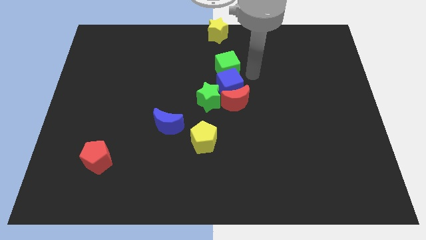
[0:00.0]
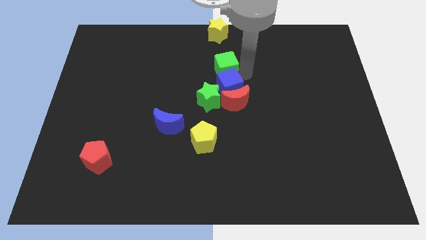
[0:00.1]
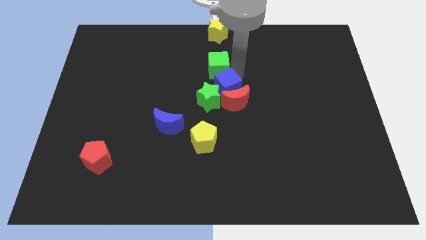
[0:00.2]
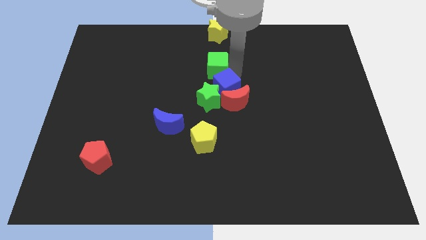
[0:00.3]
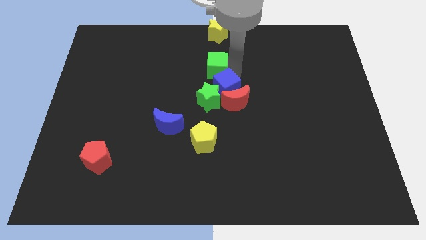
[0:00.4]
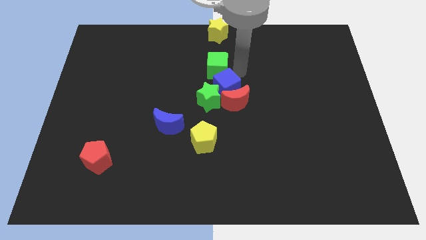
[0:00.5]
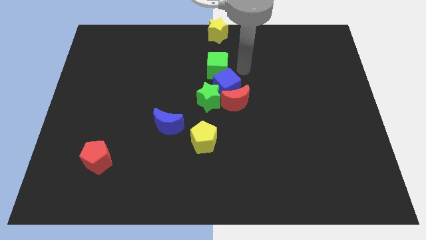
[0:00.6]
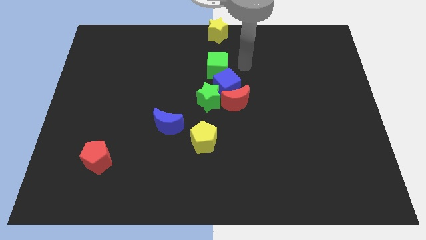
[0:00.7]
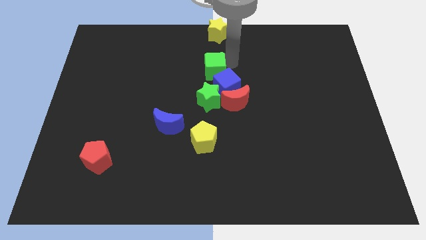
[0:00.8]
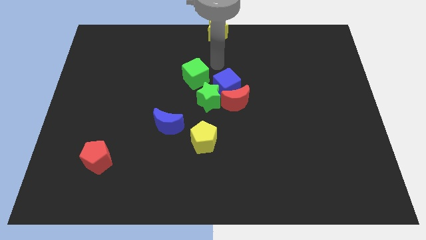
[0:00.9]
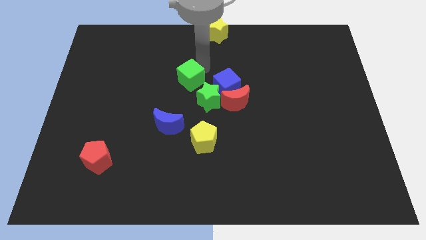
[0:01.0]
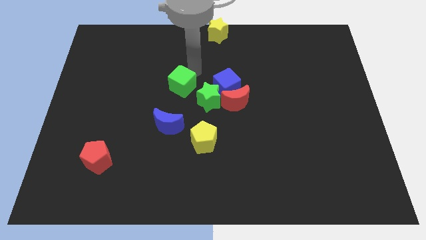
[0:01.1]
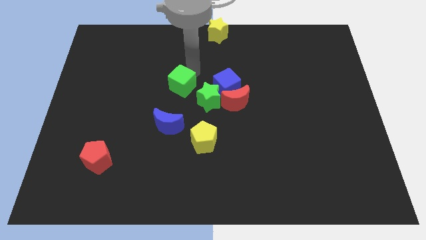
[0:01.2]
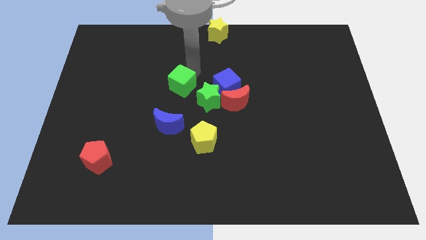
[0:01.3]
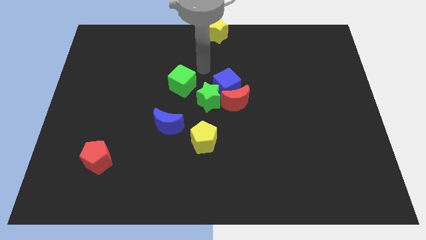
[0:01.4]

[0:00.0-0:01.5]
separate the green cube from the blue cube

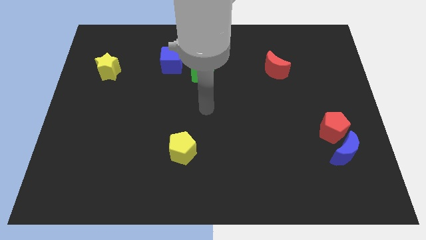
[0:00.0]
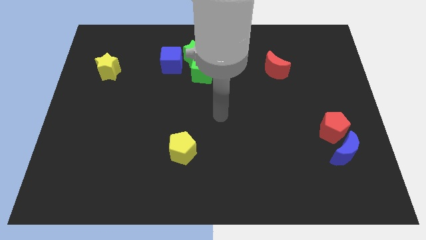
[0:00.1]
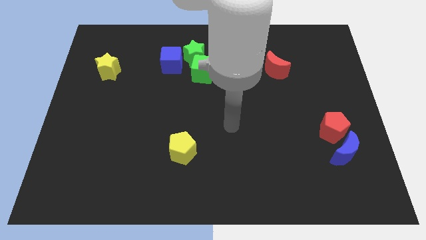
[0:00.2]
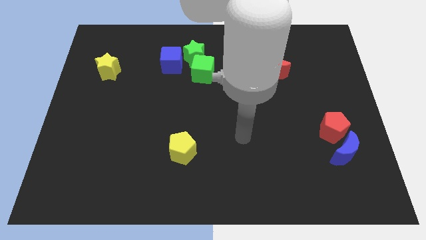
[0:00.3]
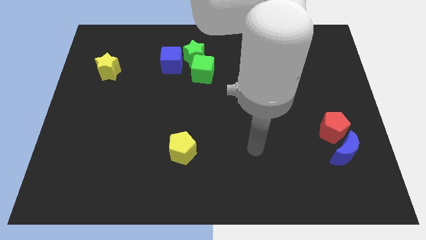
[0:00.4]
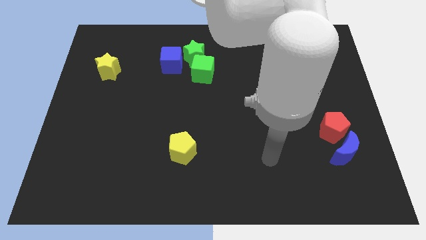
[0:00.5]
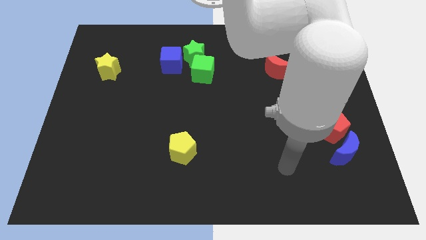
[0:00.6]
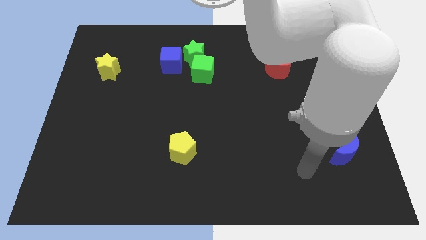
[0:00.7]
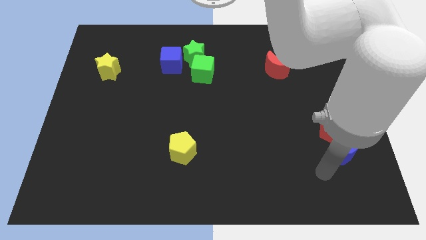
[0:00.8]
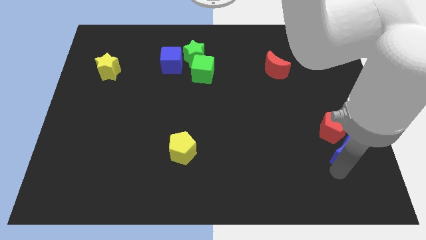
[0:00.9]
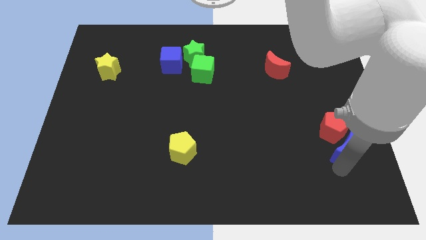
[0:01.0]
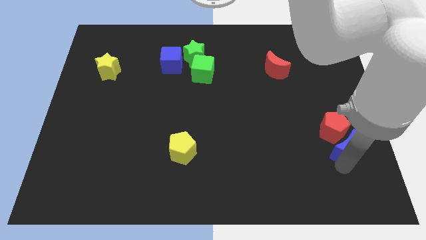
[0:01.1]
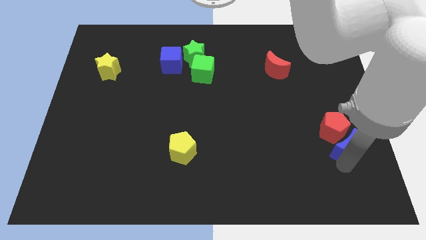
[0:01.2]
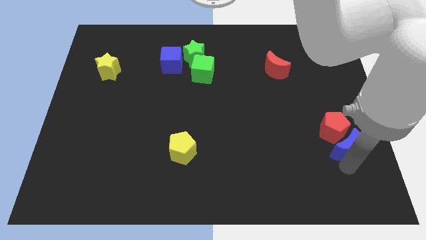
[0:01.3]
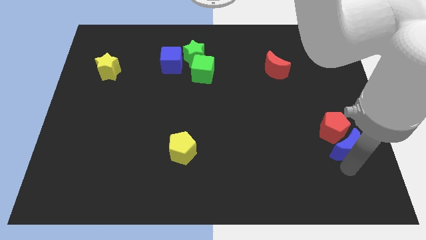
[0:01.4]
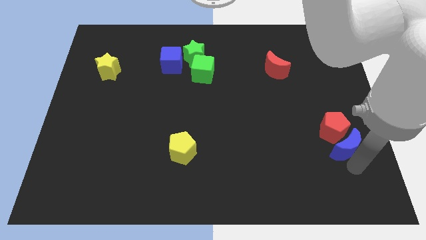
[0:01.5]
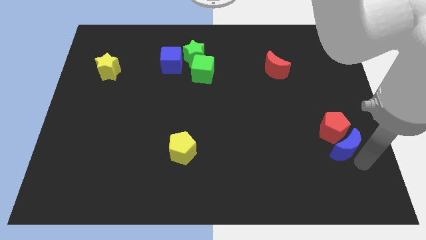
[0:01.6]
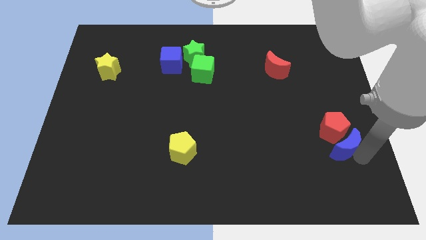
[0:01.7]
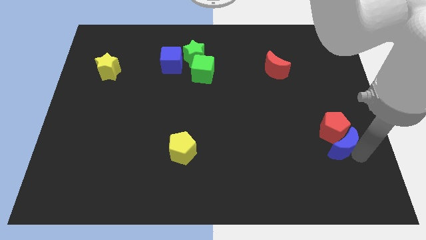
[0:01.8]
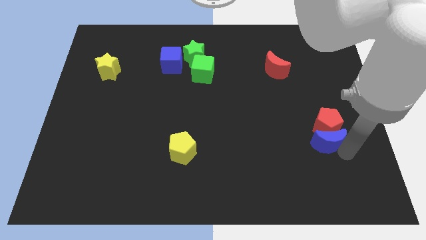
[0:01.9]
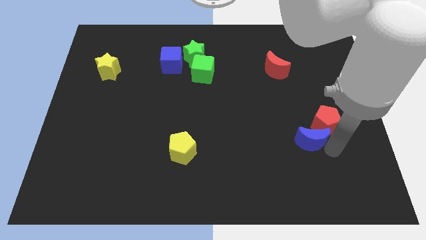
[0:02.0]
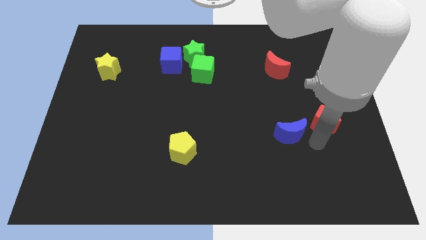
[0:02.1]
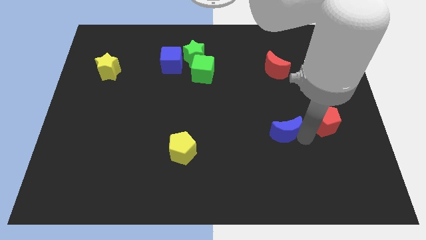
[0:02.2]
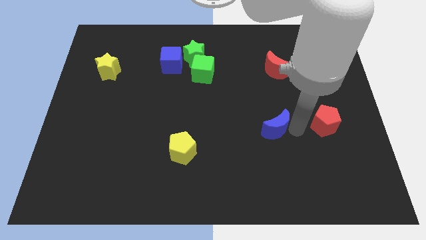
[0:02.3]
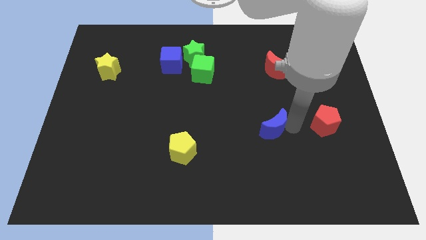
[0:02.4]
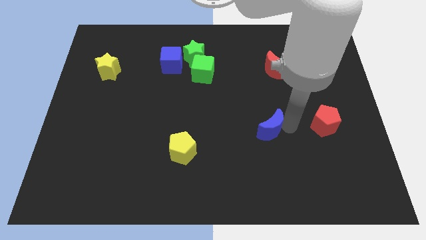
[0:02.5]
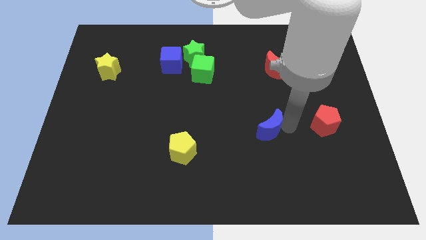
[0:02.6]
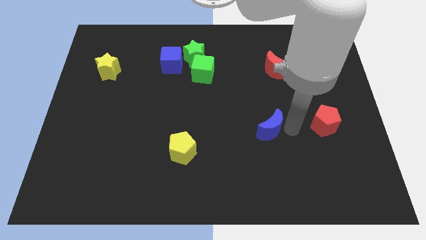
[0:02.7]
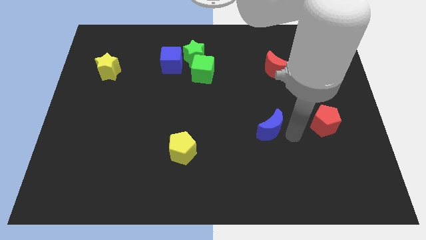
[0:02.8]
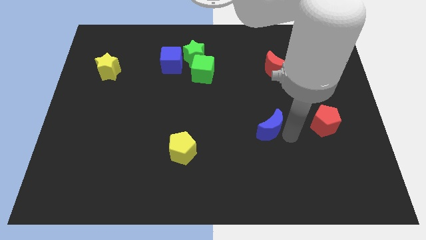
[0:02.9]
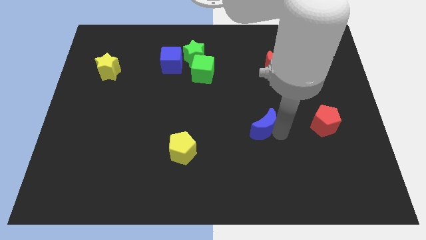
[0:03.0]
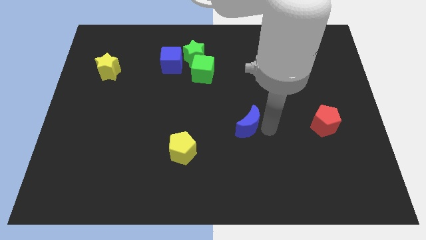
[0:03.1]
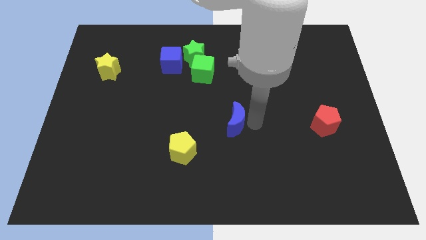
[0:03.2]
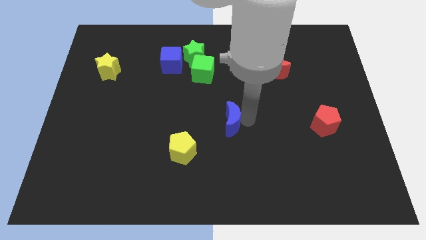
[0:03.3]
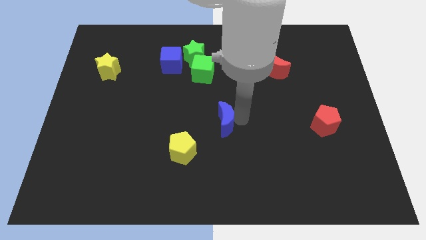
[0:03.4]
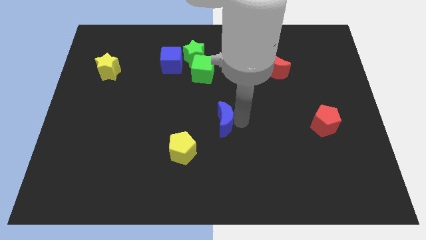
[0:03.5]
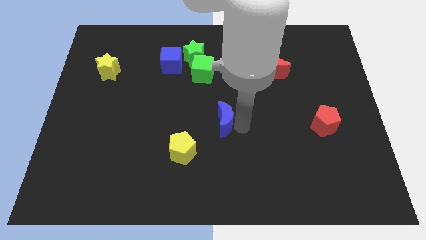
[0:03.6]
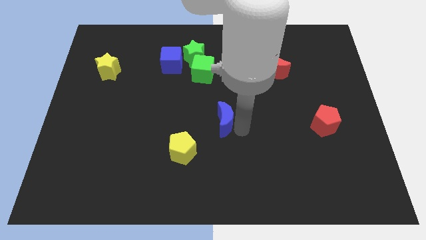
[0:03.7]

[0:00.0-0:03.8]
place the blue crescent to the left of the red pentagon

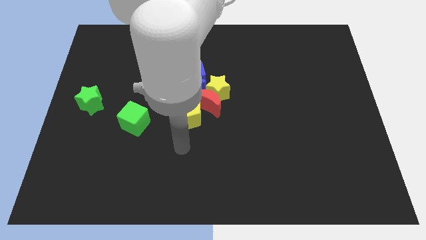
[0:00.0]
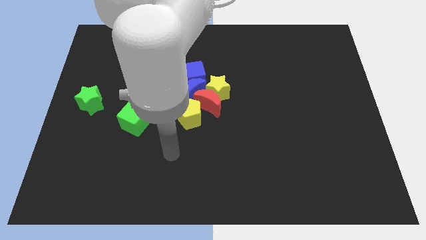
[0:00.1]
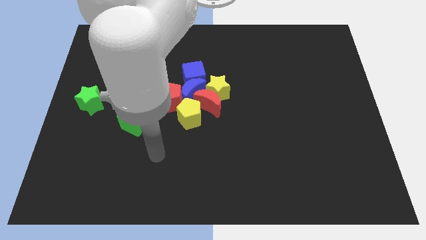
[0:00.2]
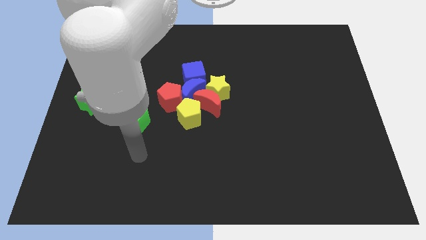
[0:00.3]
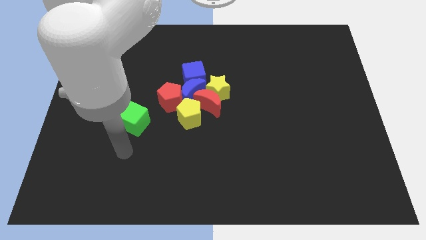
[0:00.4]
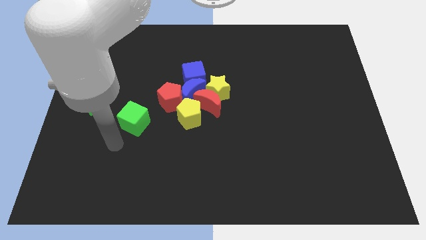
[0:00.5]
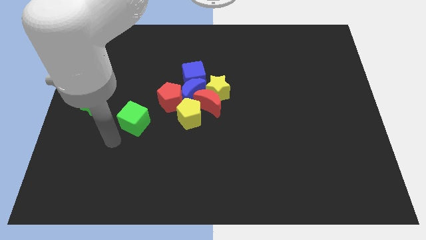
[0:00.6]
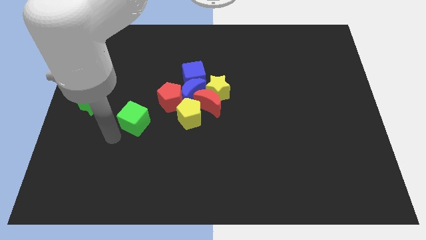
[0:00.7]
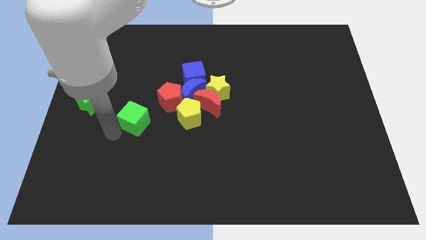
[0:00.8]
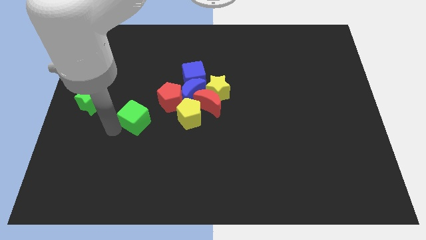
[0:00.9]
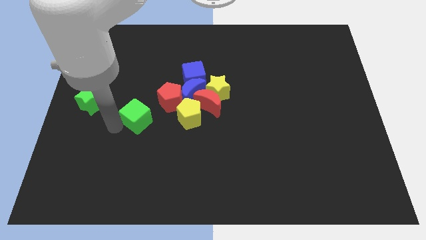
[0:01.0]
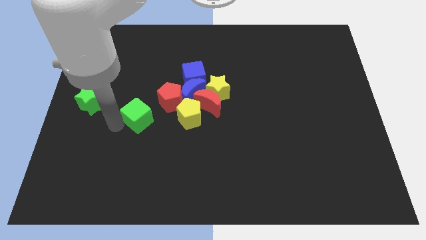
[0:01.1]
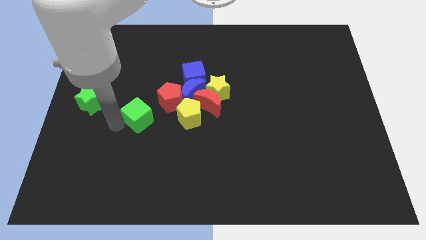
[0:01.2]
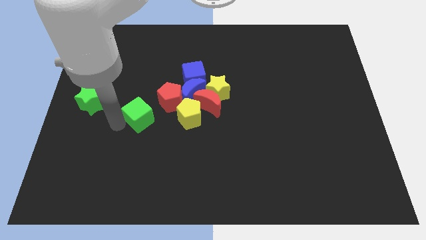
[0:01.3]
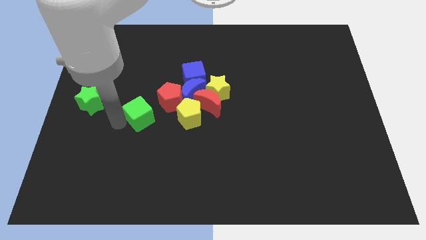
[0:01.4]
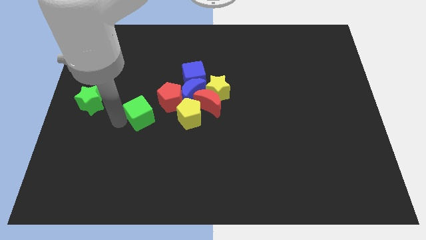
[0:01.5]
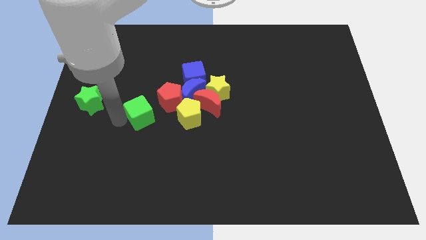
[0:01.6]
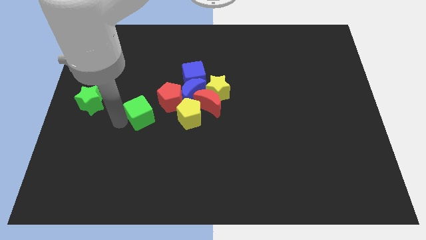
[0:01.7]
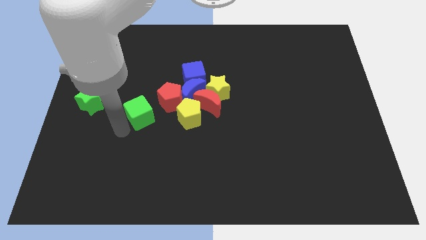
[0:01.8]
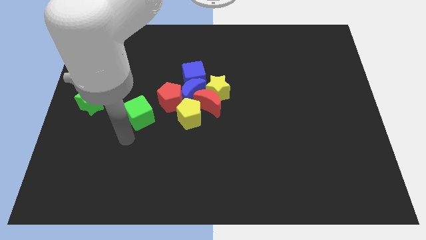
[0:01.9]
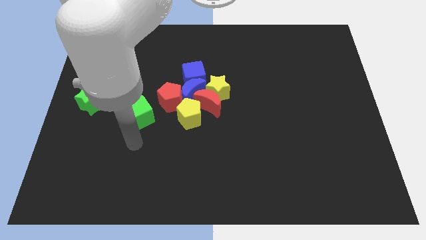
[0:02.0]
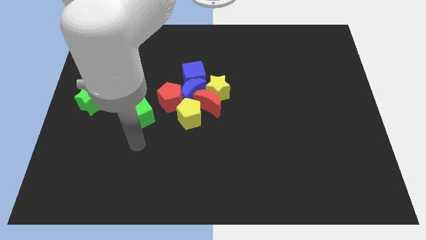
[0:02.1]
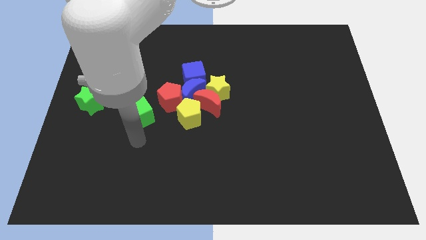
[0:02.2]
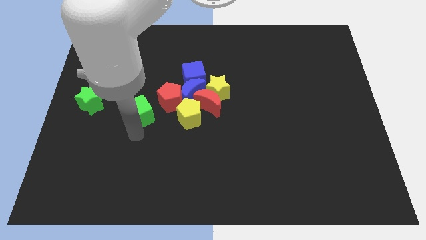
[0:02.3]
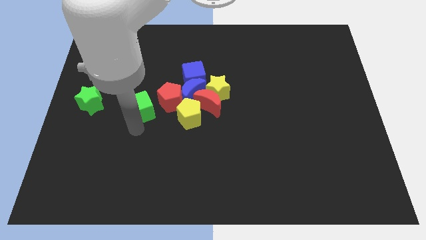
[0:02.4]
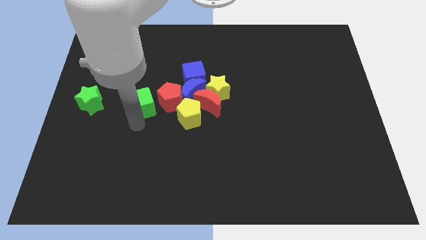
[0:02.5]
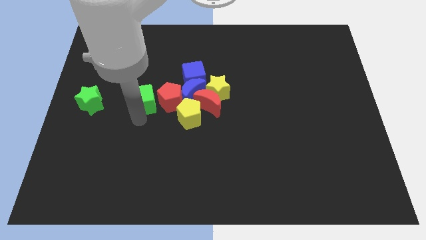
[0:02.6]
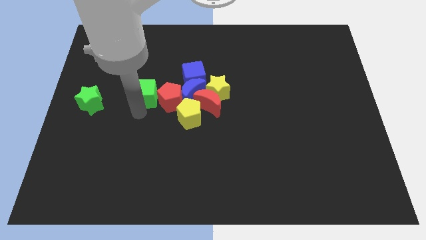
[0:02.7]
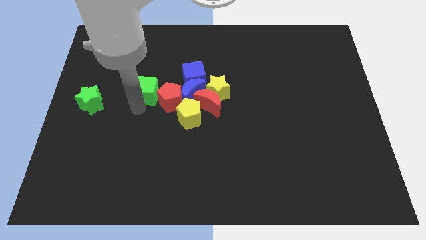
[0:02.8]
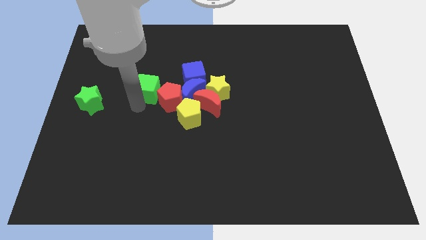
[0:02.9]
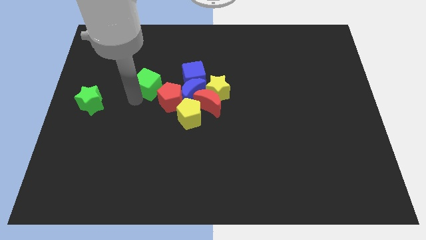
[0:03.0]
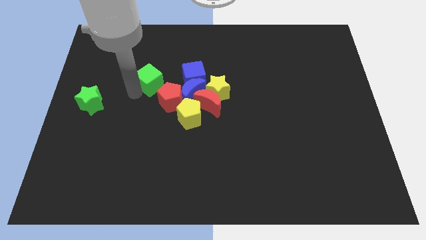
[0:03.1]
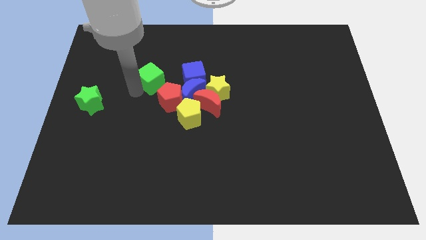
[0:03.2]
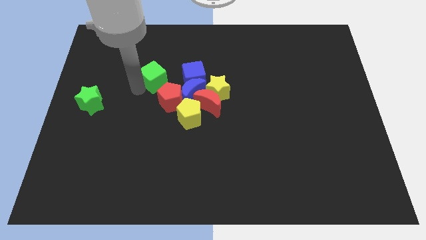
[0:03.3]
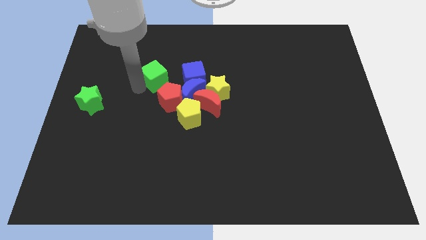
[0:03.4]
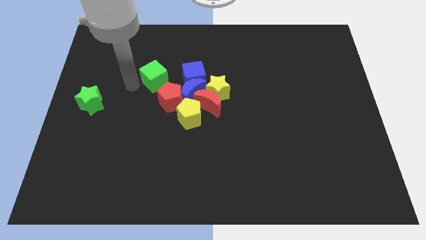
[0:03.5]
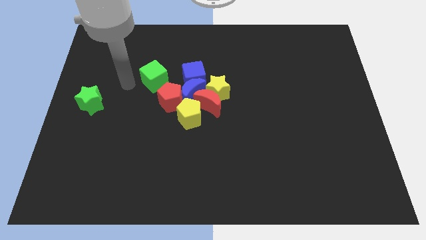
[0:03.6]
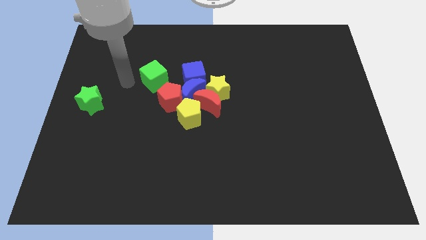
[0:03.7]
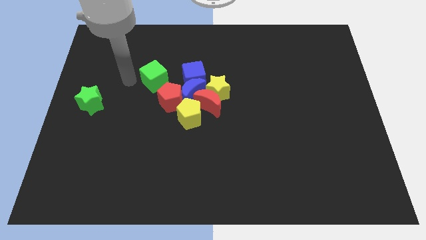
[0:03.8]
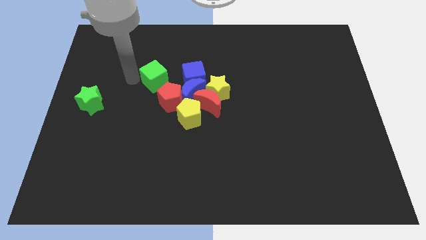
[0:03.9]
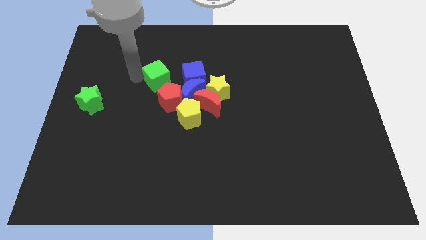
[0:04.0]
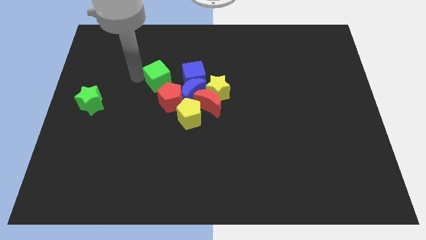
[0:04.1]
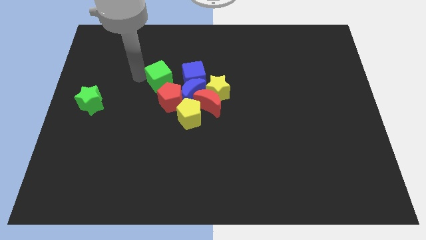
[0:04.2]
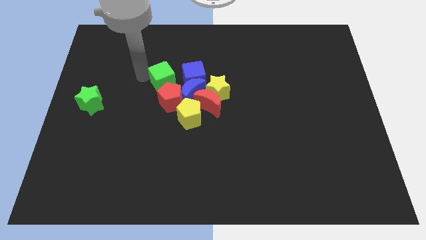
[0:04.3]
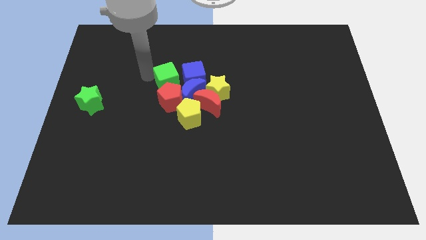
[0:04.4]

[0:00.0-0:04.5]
place the green cube above the red pentagon
